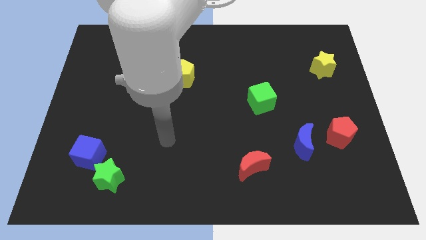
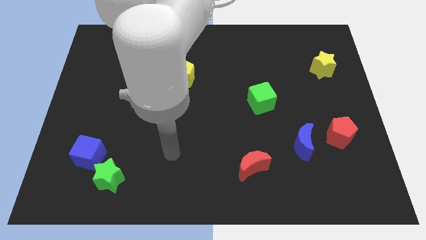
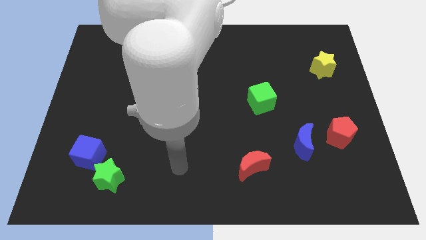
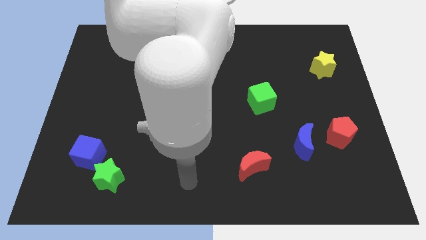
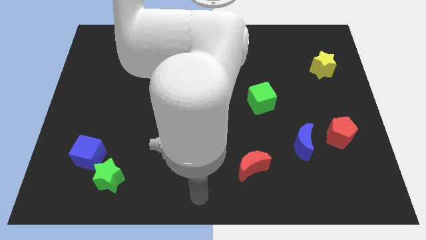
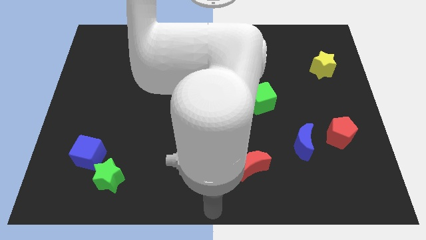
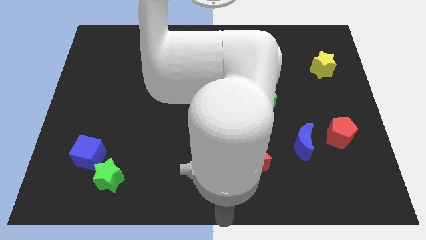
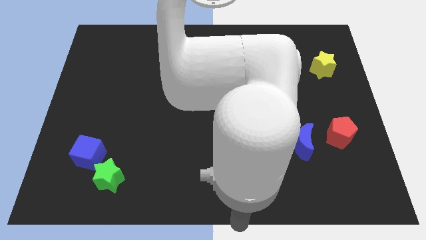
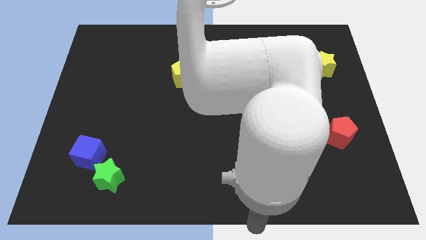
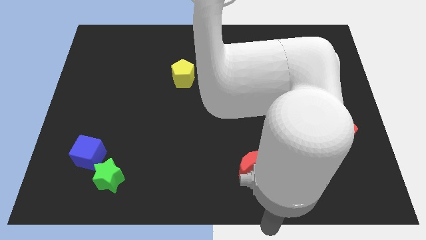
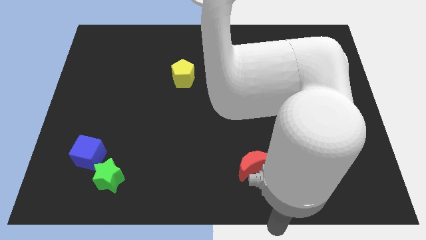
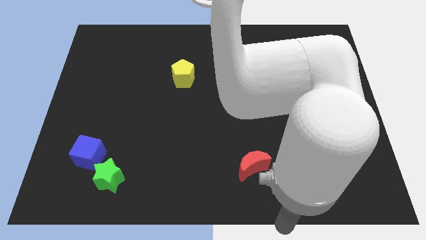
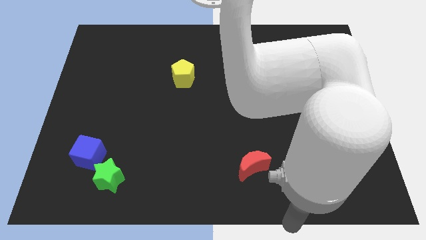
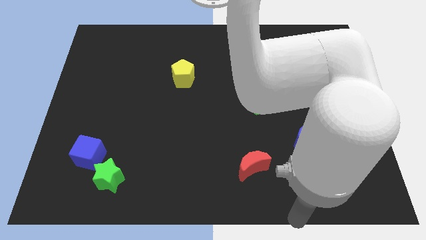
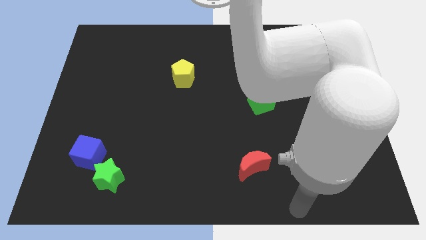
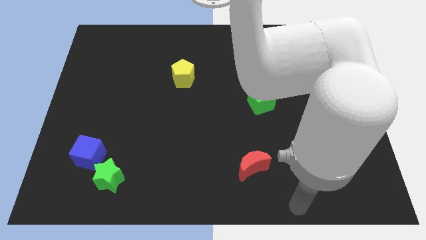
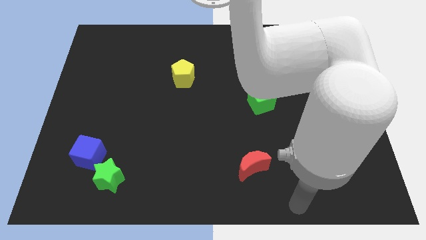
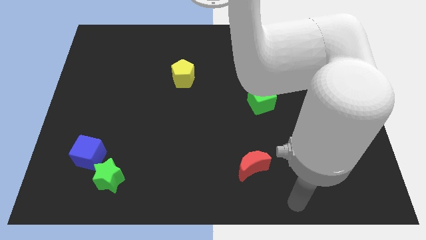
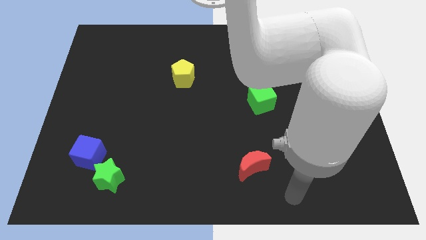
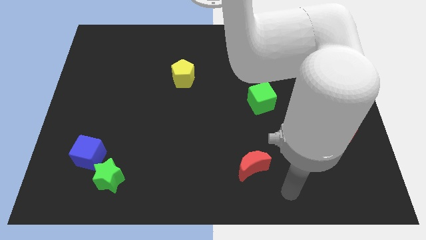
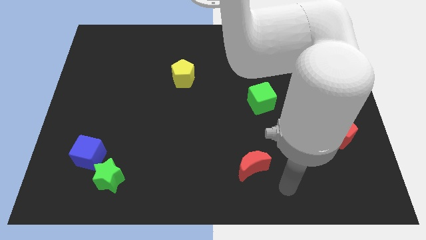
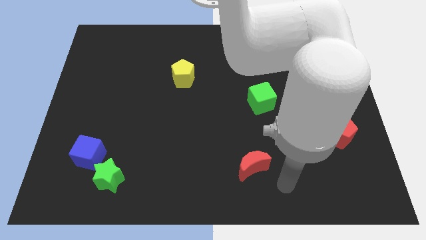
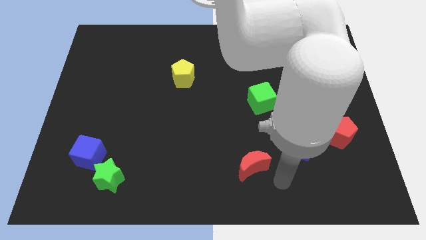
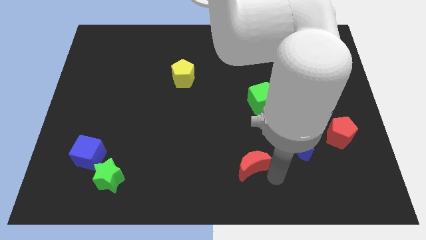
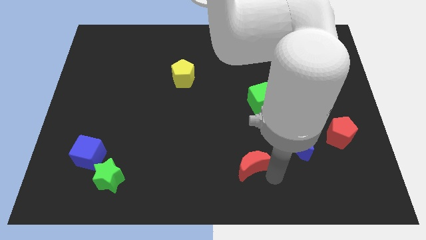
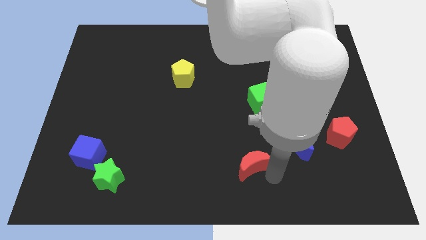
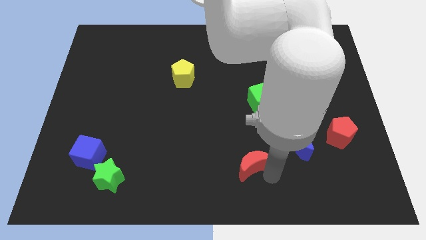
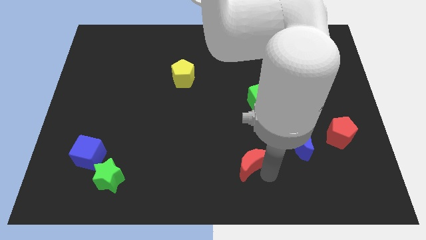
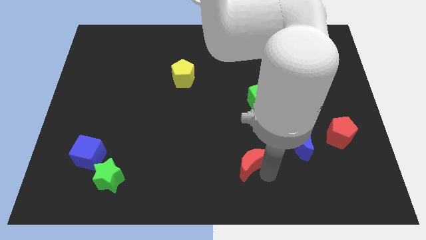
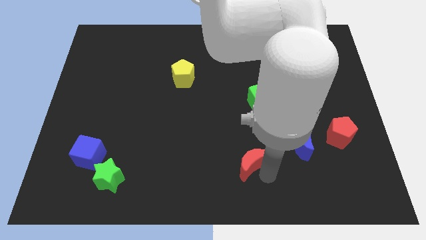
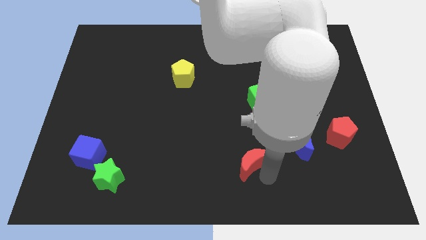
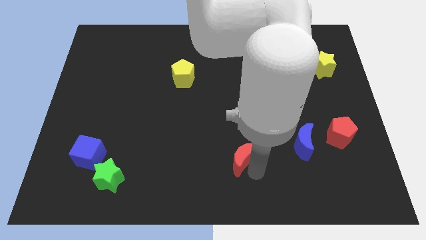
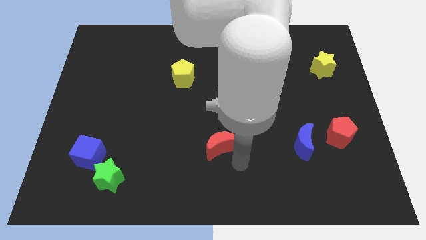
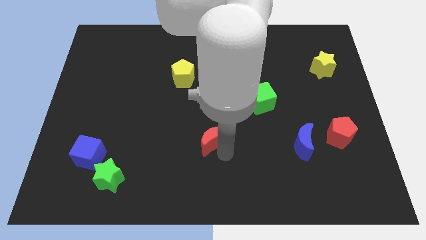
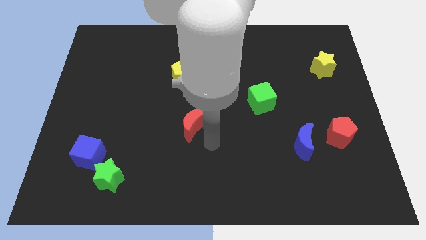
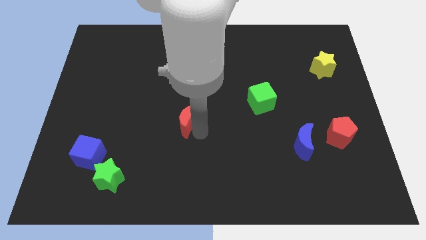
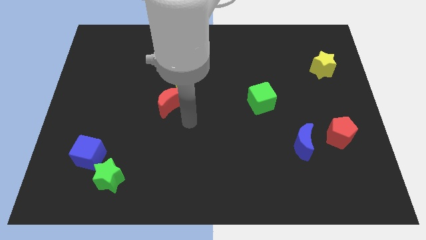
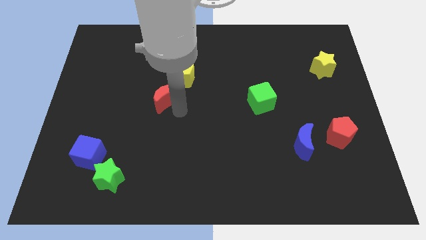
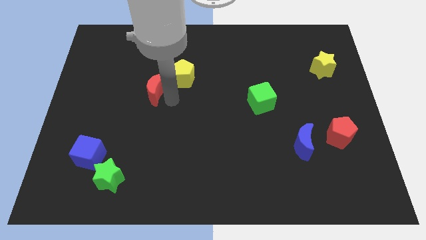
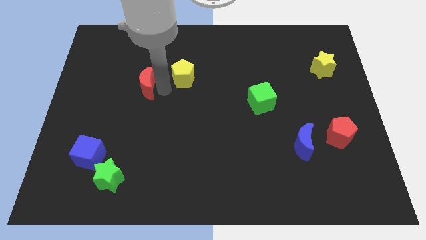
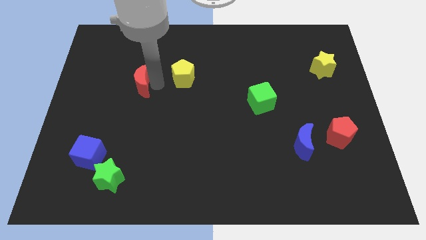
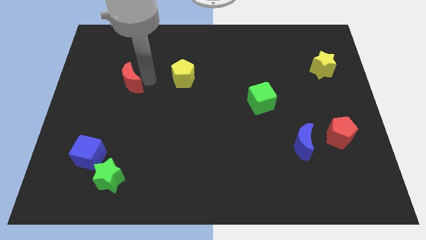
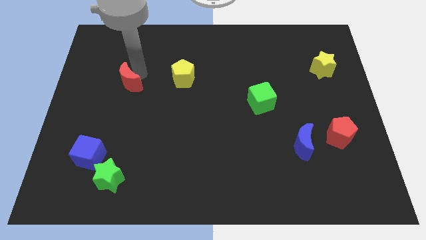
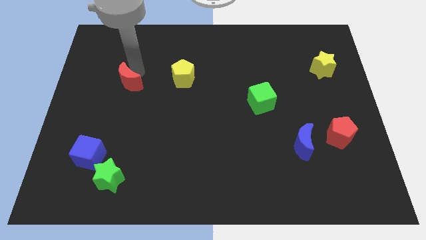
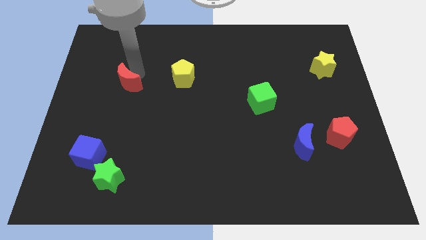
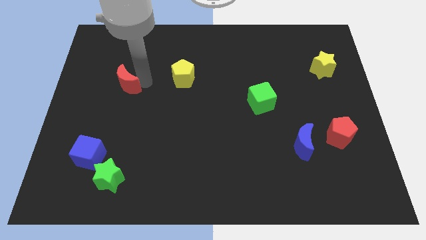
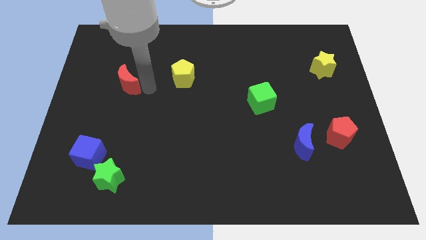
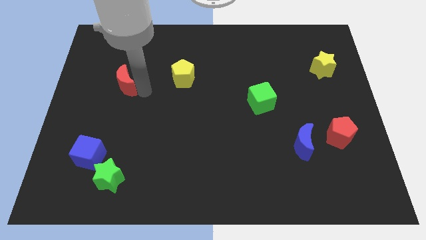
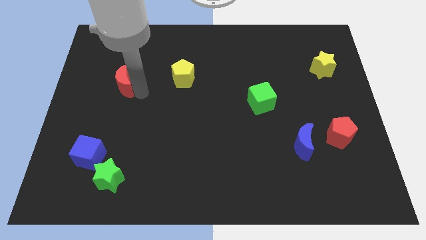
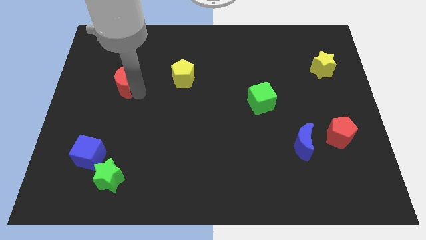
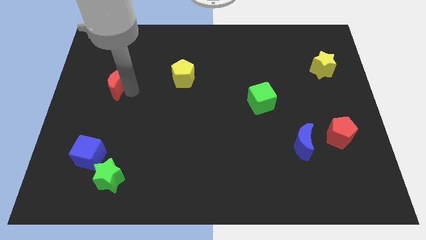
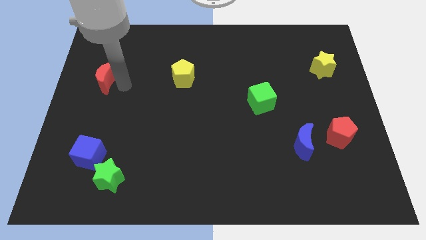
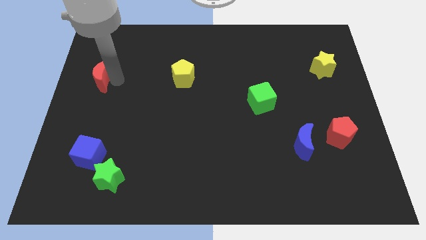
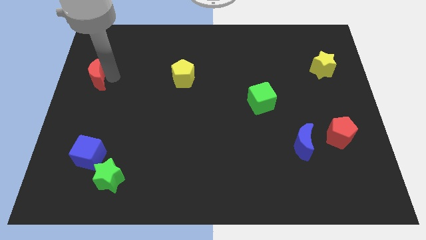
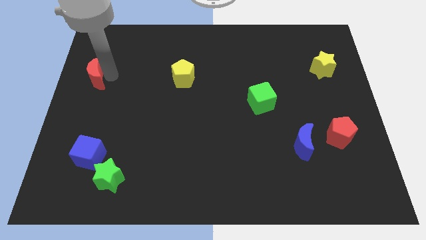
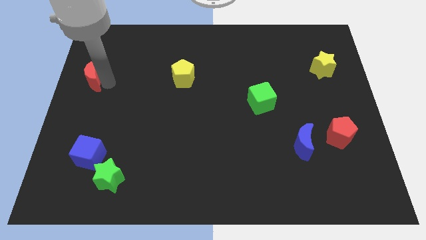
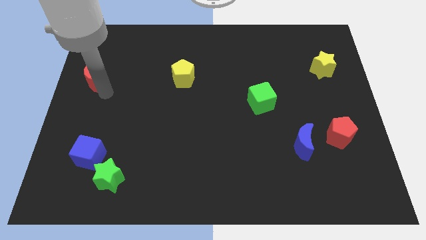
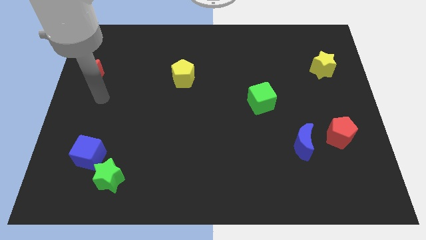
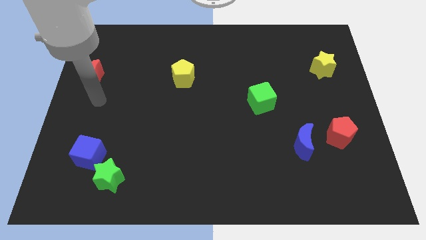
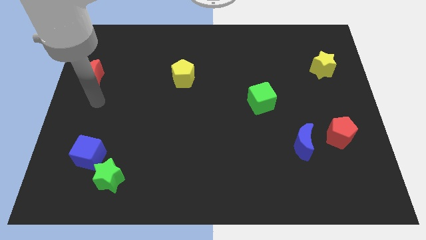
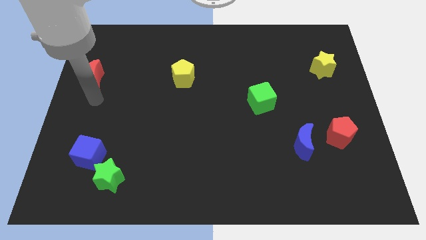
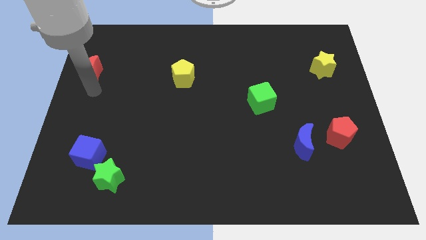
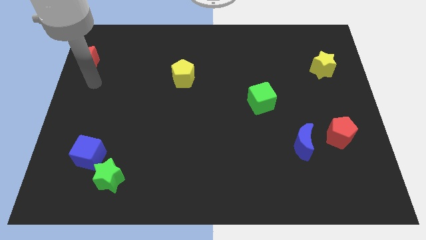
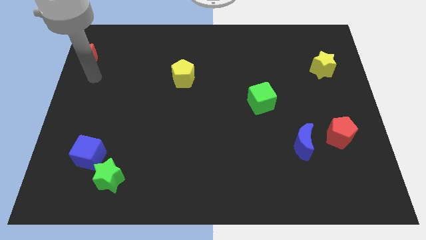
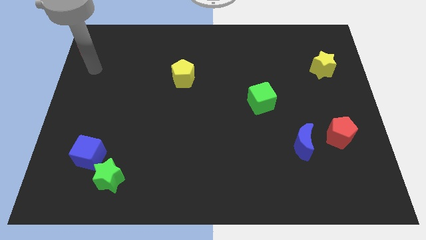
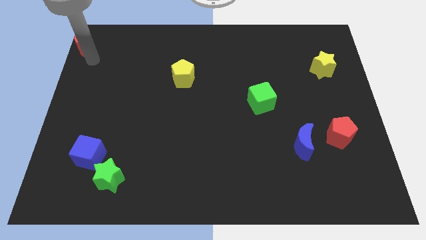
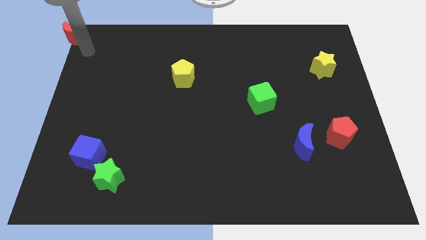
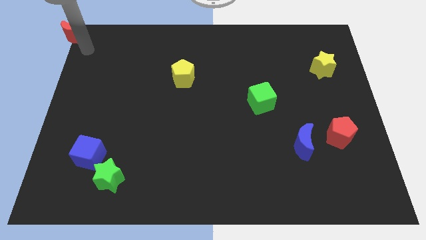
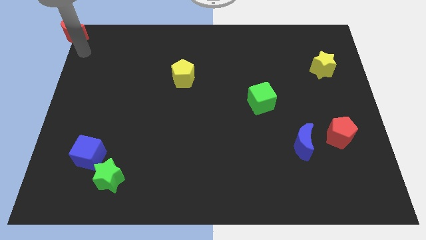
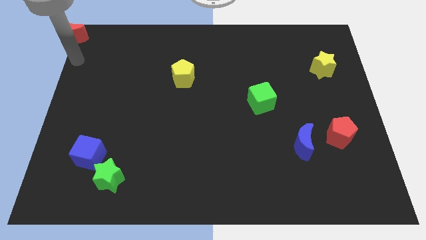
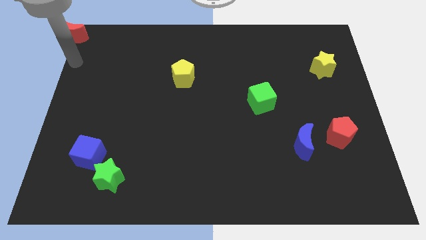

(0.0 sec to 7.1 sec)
move the red crescent to the top left corner

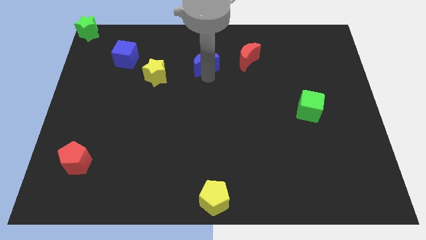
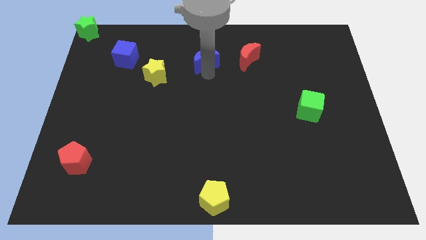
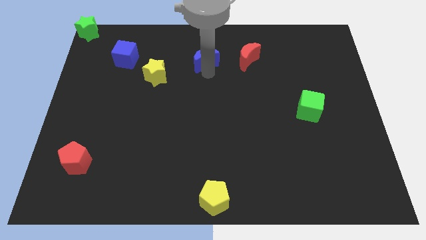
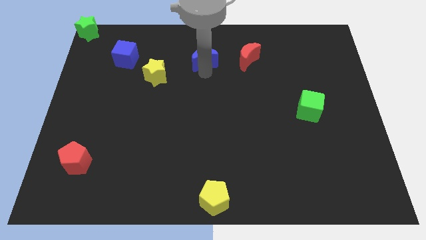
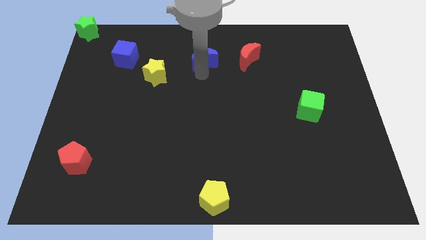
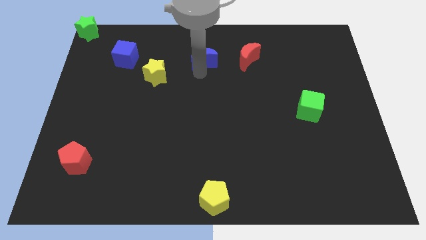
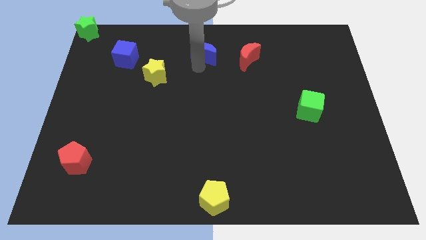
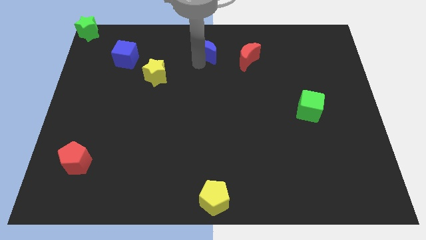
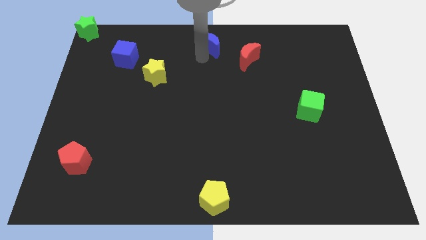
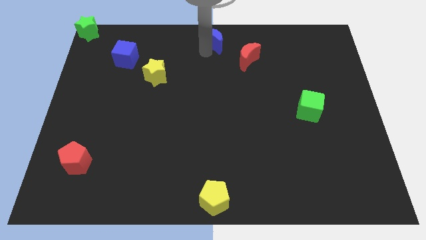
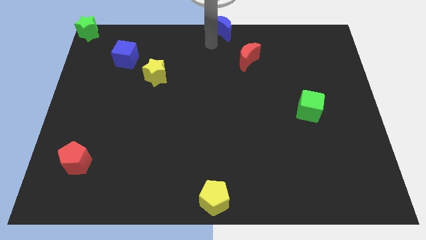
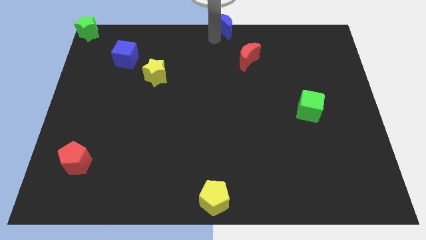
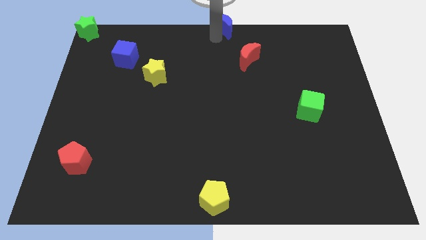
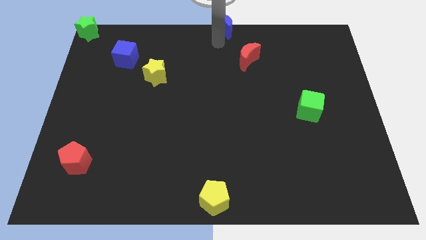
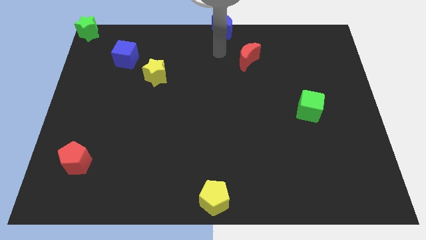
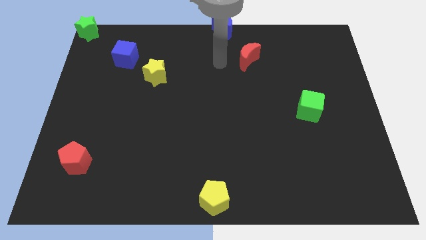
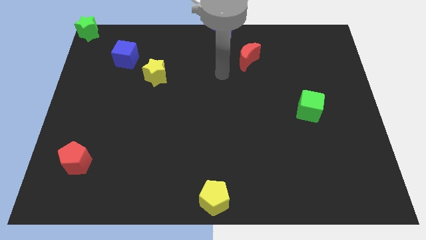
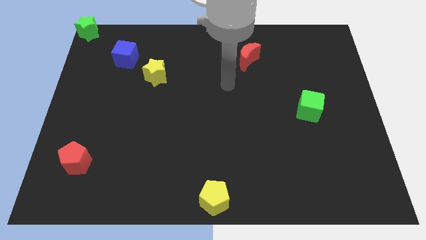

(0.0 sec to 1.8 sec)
slide the blue crescent to top center
